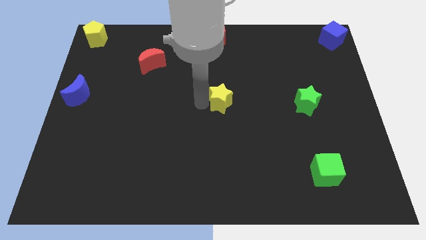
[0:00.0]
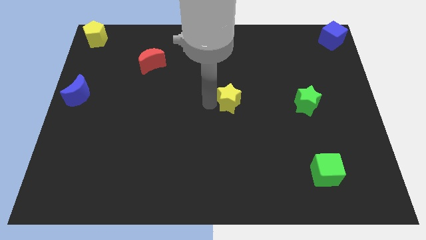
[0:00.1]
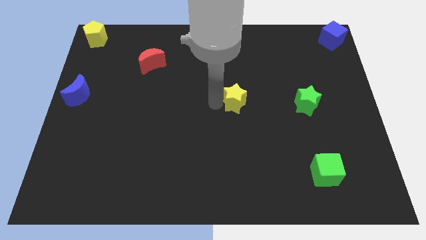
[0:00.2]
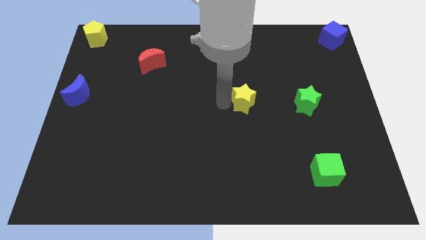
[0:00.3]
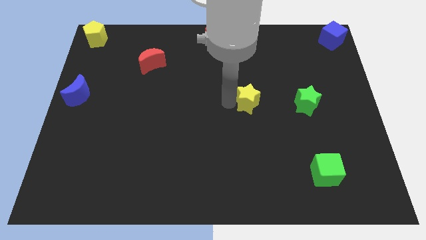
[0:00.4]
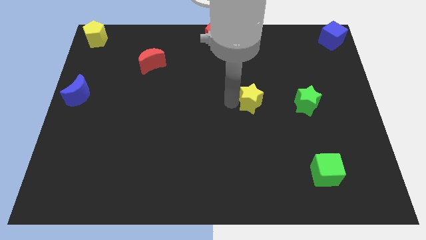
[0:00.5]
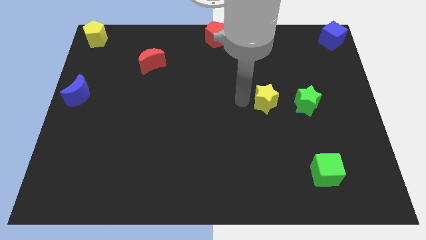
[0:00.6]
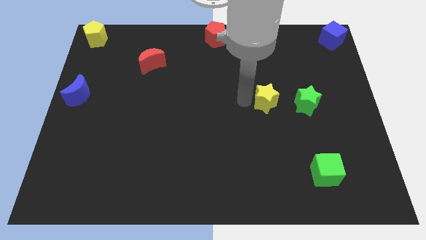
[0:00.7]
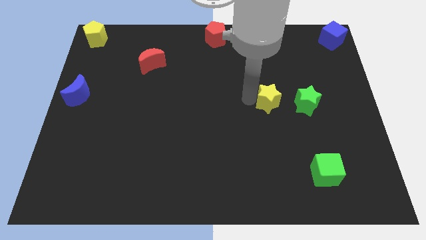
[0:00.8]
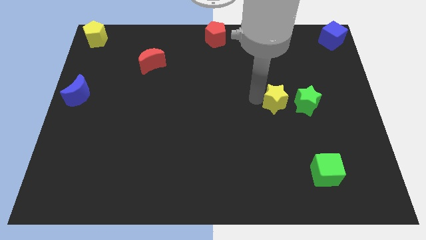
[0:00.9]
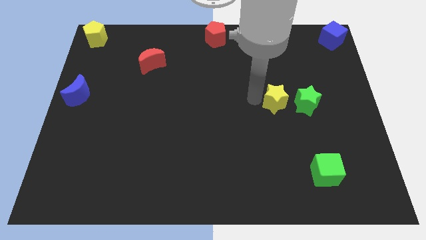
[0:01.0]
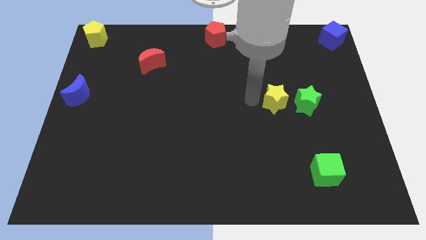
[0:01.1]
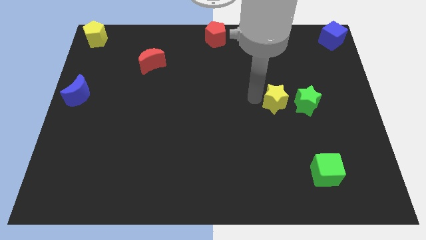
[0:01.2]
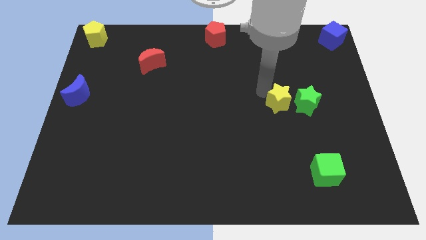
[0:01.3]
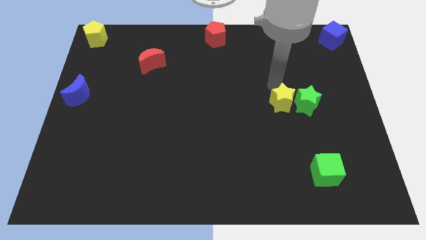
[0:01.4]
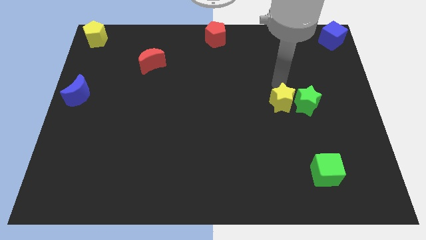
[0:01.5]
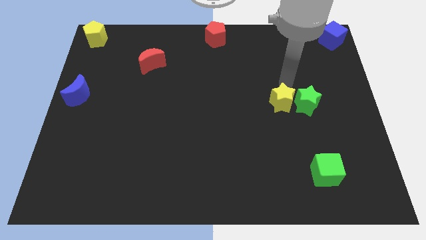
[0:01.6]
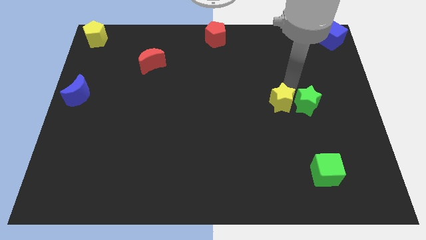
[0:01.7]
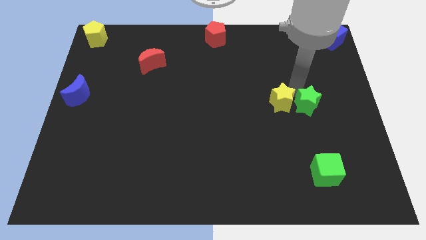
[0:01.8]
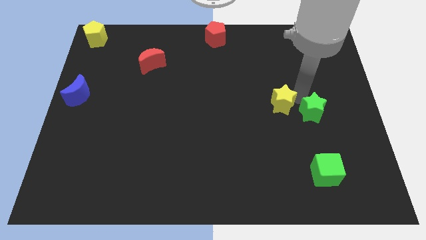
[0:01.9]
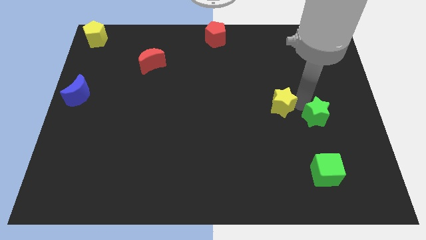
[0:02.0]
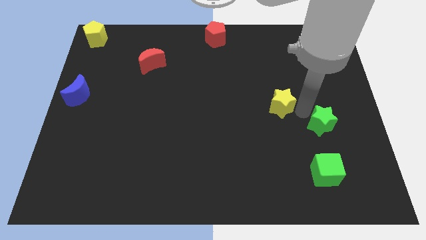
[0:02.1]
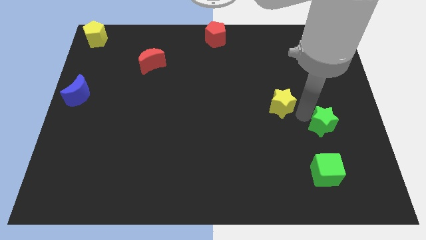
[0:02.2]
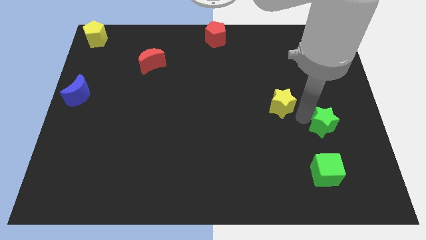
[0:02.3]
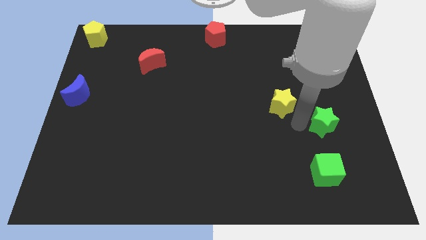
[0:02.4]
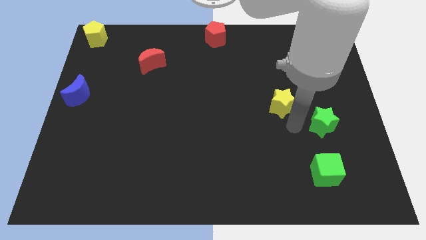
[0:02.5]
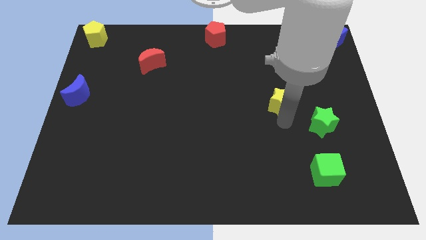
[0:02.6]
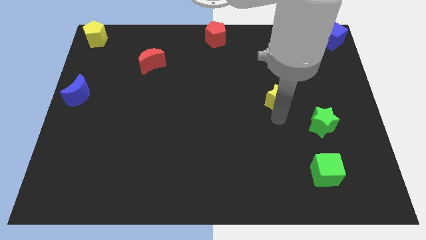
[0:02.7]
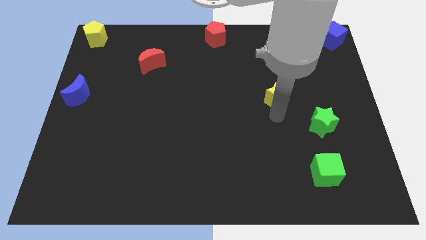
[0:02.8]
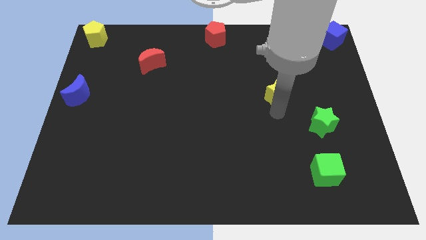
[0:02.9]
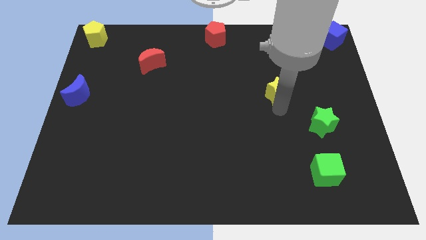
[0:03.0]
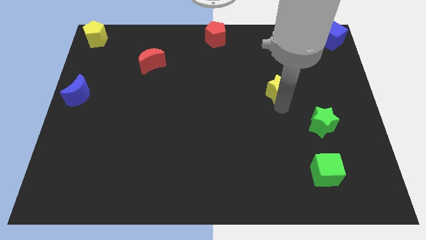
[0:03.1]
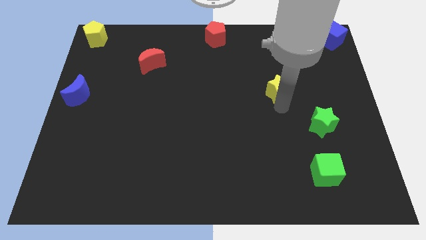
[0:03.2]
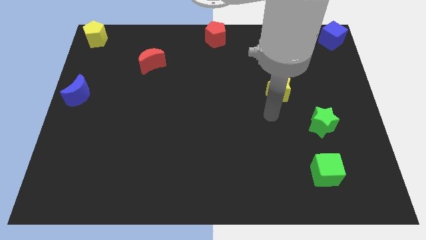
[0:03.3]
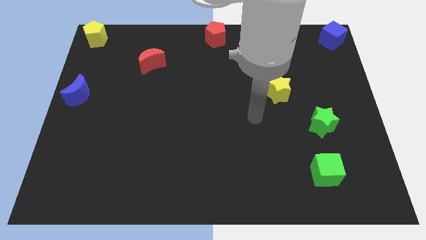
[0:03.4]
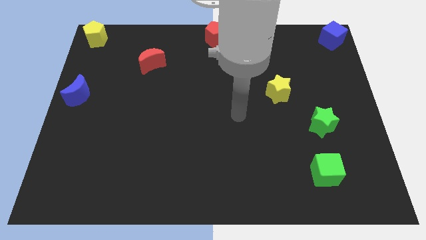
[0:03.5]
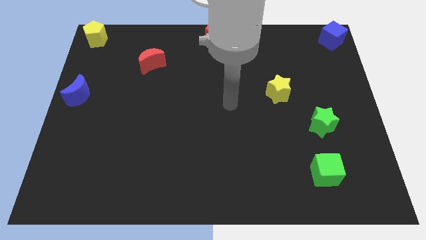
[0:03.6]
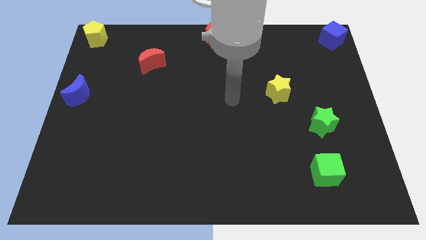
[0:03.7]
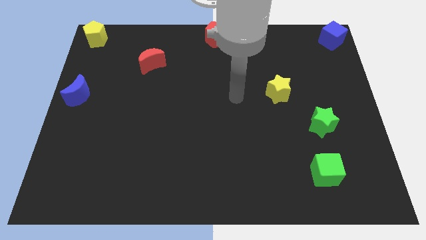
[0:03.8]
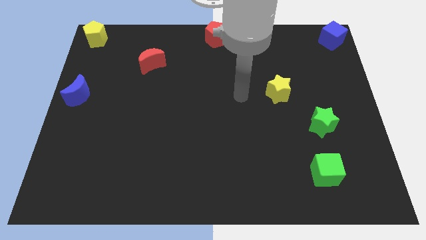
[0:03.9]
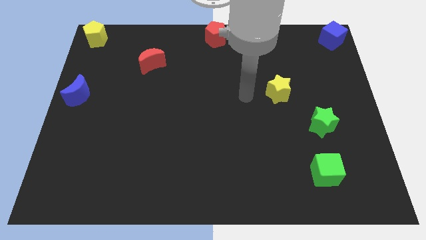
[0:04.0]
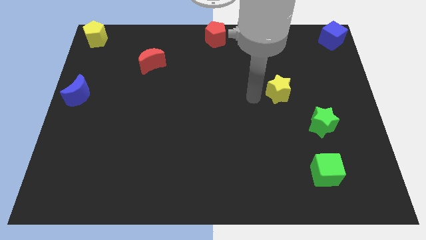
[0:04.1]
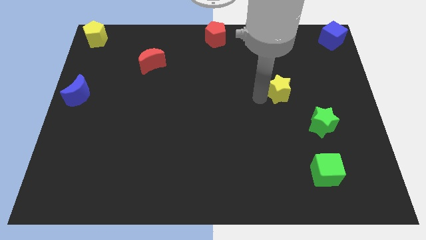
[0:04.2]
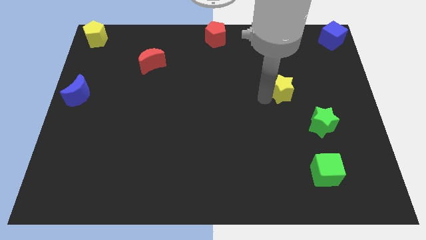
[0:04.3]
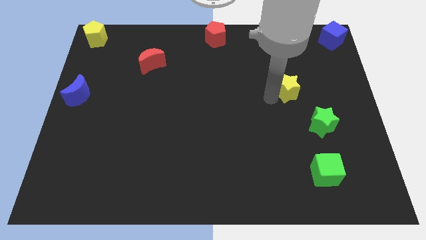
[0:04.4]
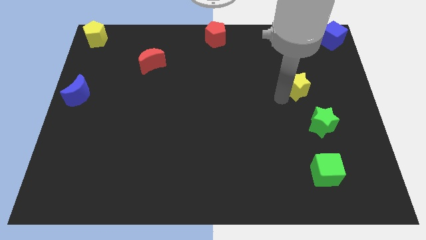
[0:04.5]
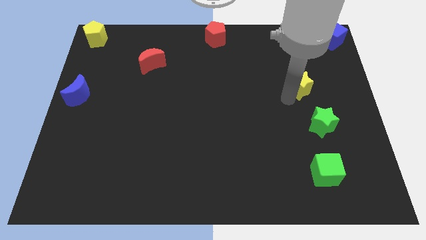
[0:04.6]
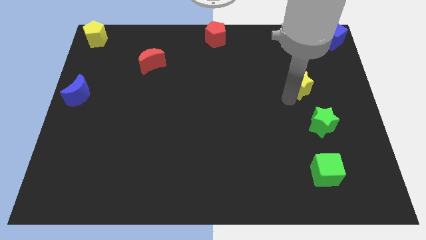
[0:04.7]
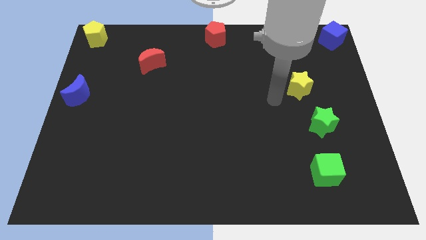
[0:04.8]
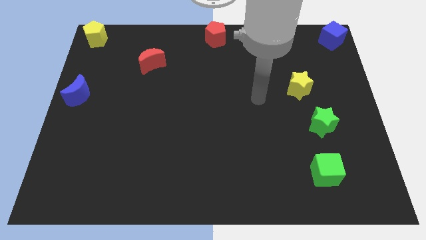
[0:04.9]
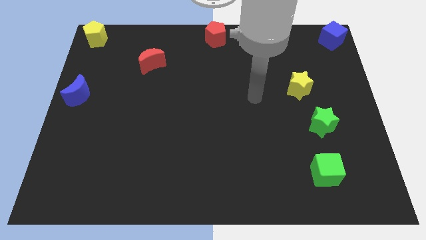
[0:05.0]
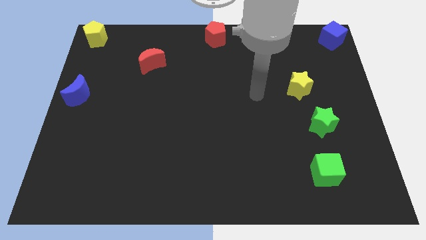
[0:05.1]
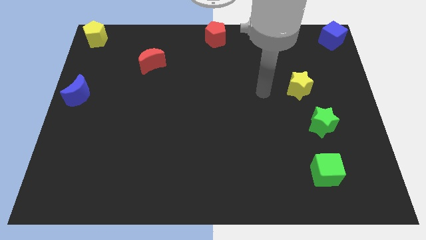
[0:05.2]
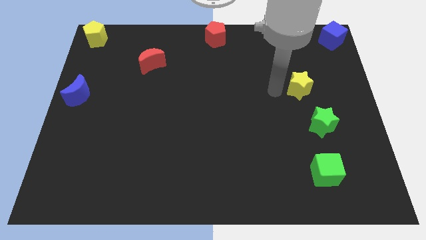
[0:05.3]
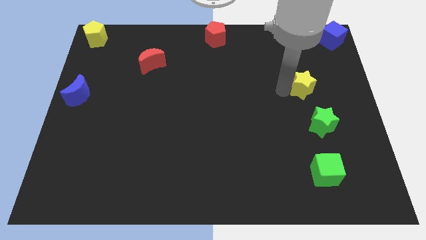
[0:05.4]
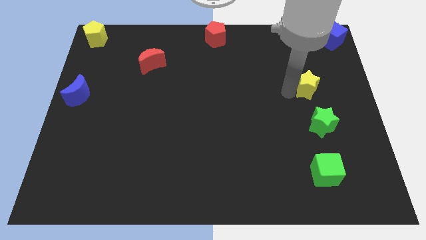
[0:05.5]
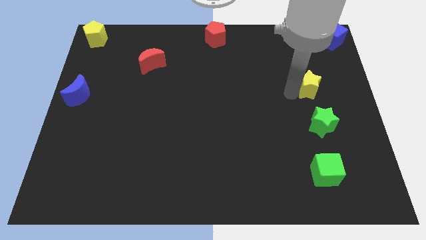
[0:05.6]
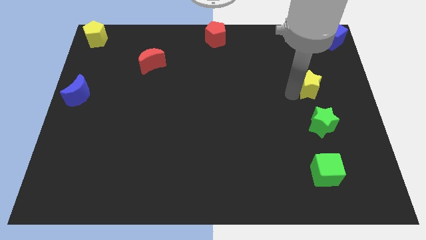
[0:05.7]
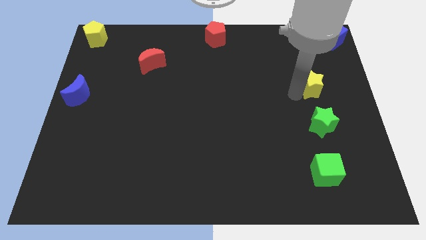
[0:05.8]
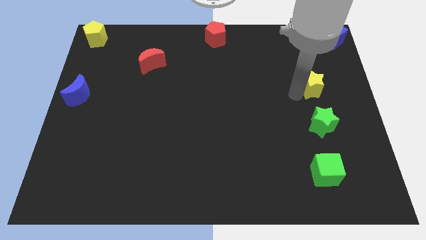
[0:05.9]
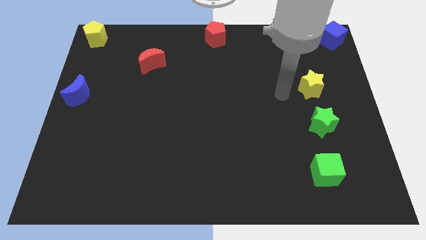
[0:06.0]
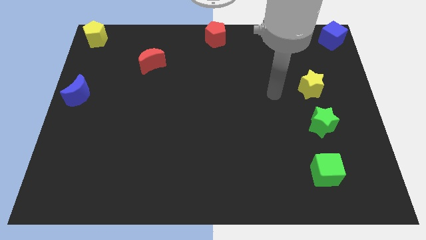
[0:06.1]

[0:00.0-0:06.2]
put the yellow star above the green star

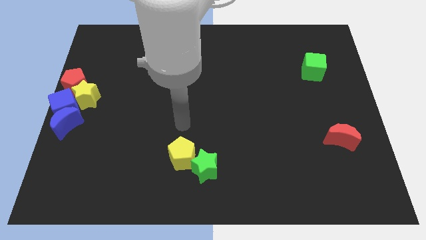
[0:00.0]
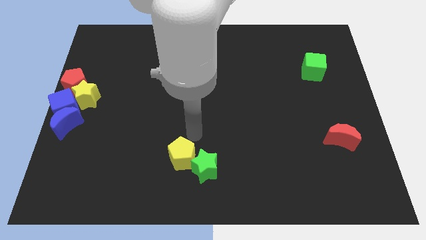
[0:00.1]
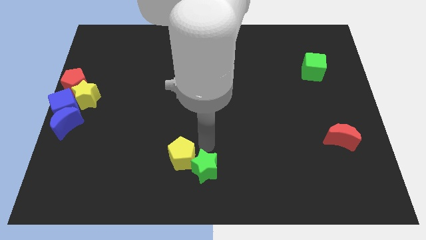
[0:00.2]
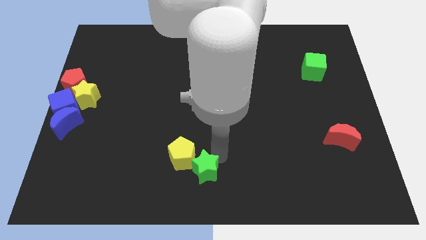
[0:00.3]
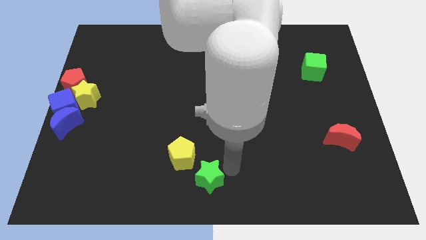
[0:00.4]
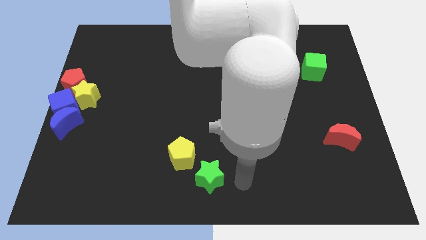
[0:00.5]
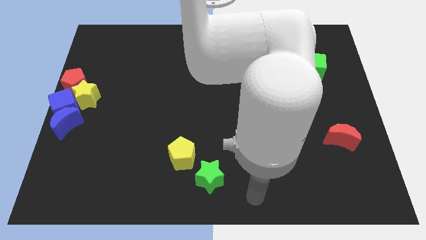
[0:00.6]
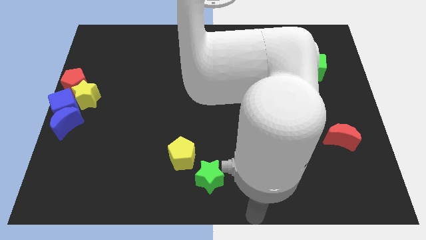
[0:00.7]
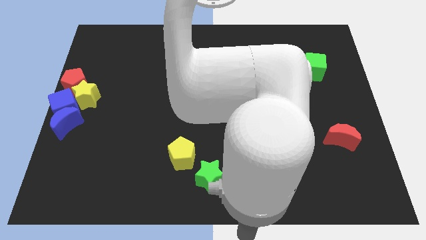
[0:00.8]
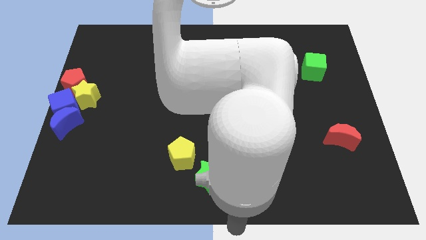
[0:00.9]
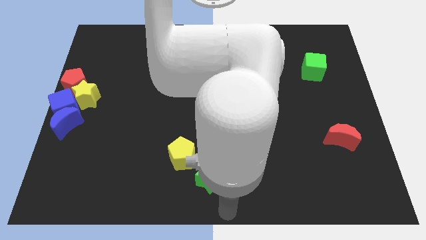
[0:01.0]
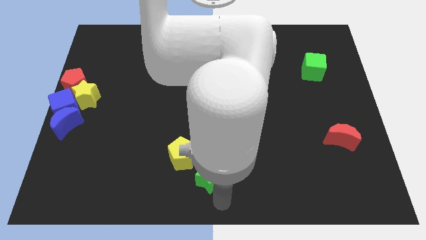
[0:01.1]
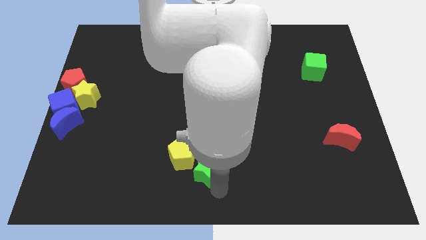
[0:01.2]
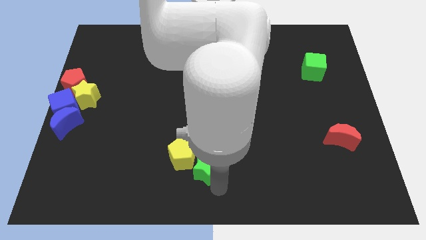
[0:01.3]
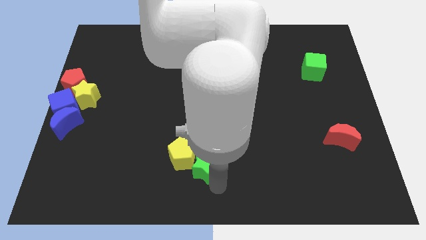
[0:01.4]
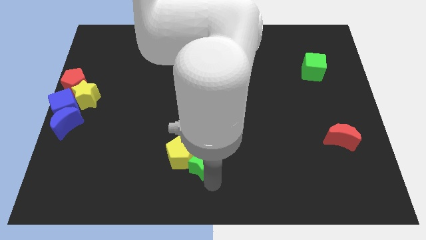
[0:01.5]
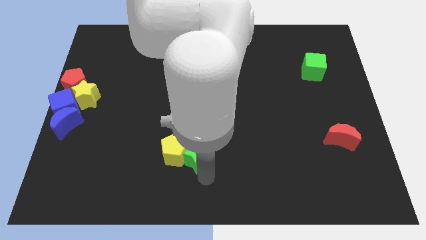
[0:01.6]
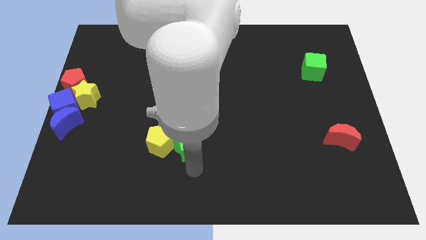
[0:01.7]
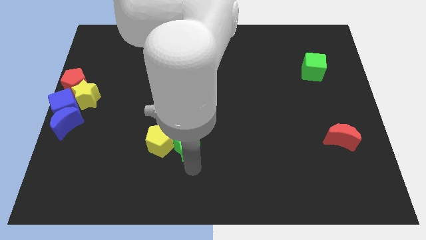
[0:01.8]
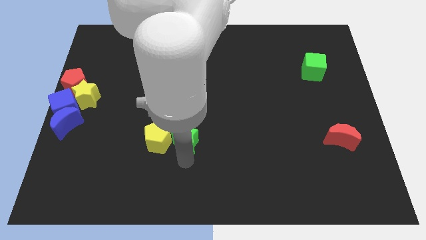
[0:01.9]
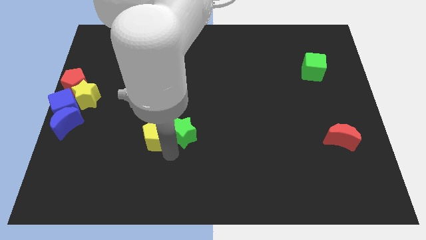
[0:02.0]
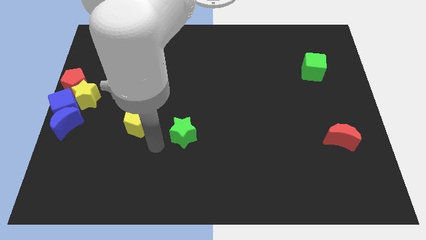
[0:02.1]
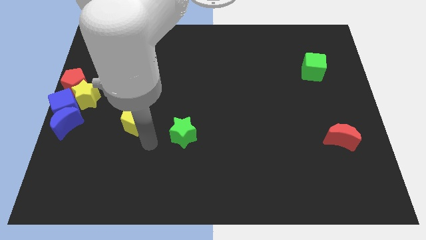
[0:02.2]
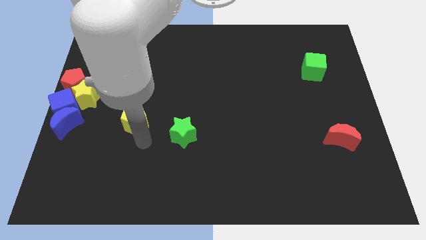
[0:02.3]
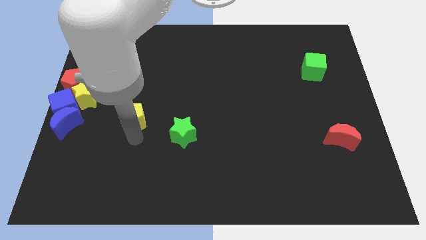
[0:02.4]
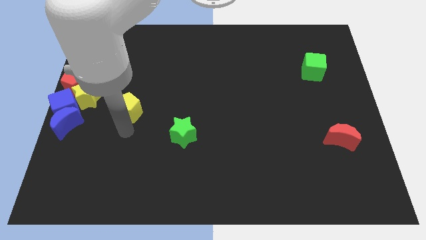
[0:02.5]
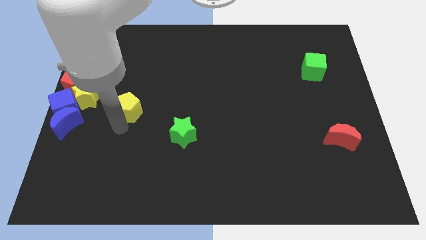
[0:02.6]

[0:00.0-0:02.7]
separate the green star and yellow pentagon
